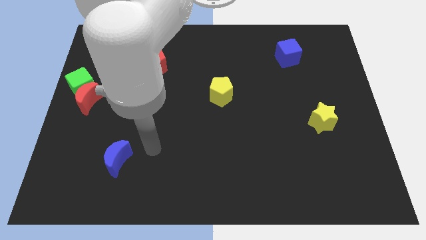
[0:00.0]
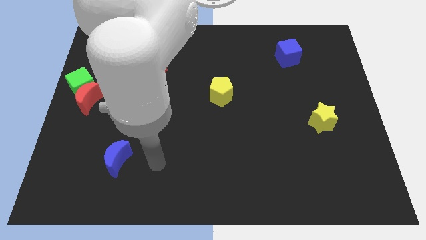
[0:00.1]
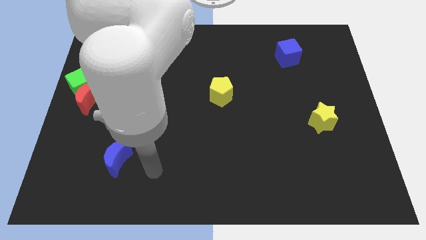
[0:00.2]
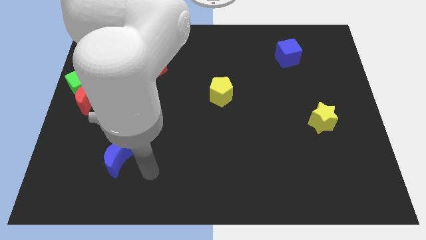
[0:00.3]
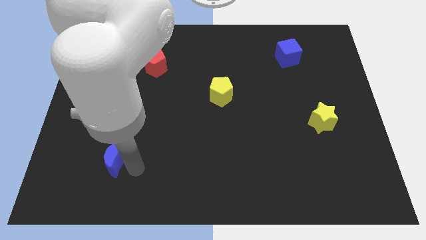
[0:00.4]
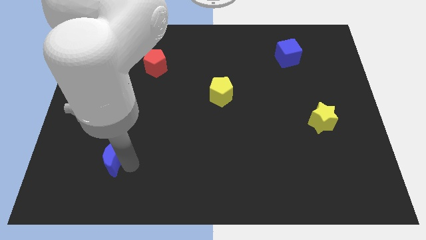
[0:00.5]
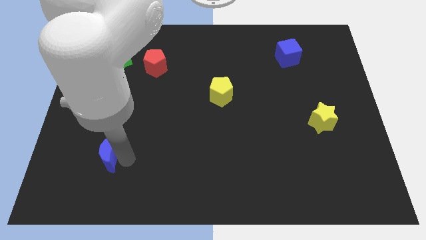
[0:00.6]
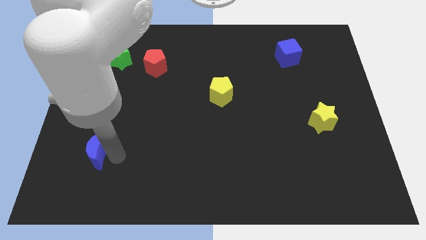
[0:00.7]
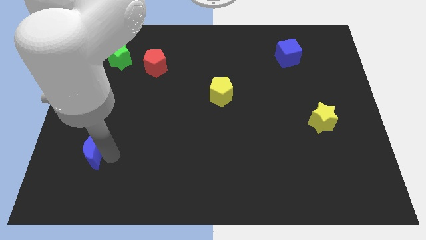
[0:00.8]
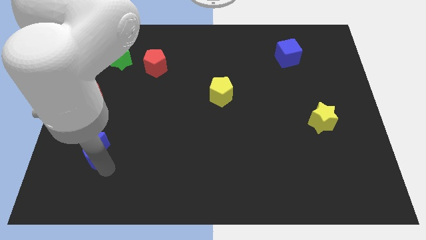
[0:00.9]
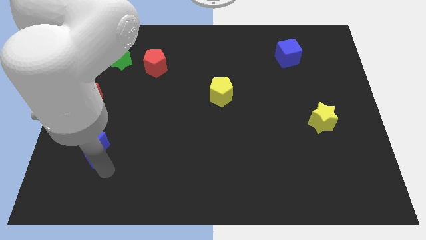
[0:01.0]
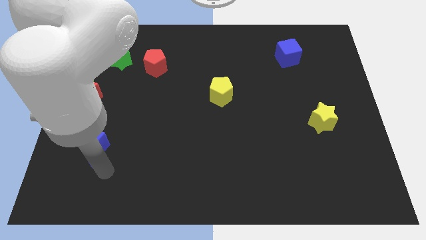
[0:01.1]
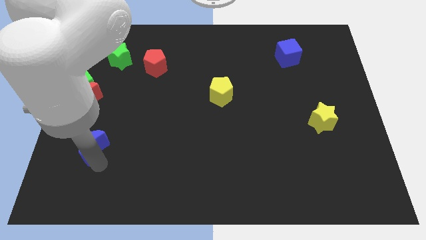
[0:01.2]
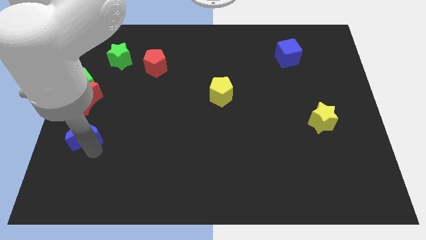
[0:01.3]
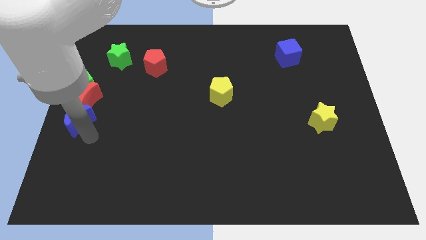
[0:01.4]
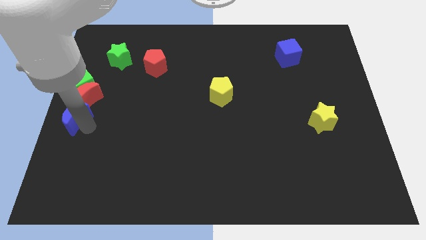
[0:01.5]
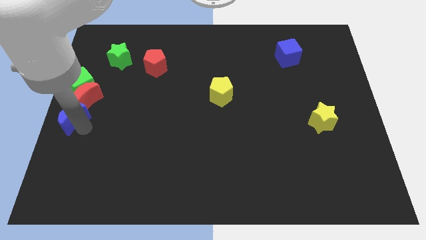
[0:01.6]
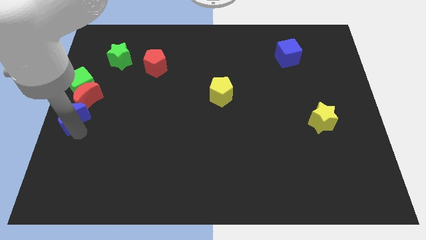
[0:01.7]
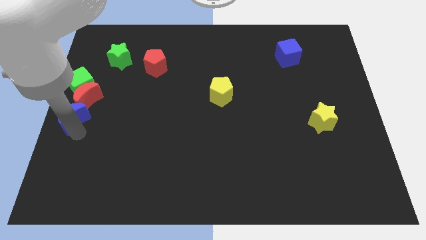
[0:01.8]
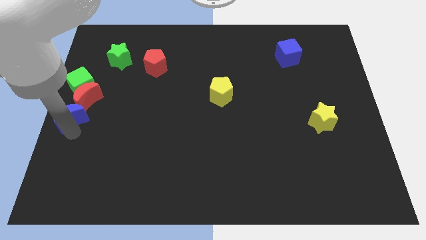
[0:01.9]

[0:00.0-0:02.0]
move the blue moon below red moon

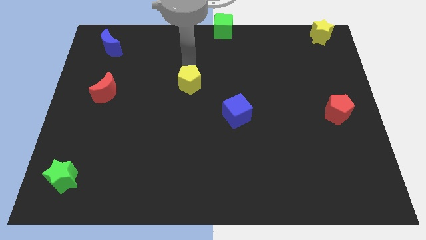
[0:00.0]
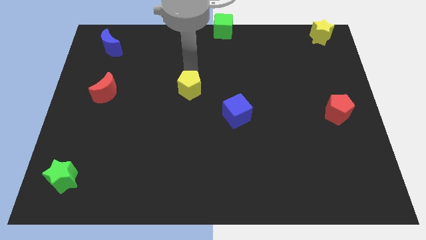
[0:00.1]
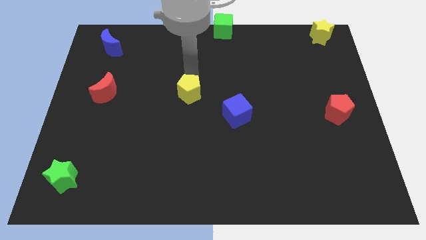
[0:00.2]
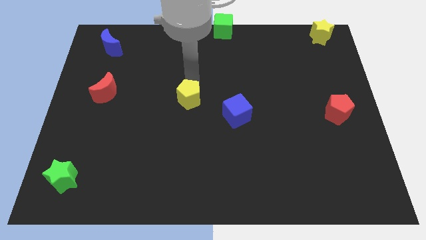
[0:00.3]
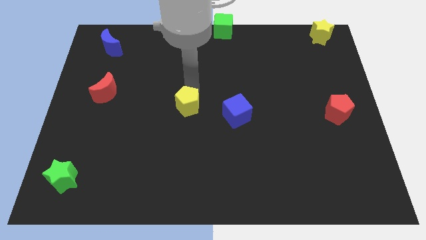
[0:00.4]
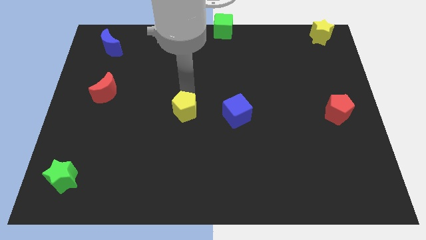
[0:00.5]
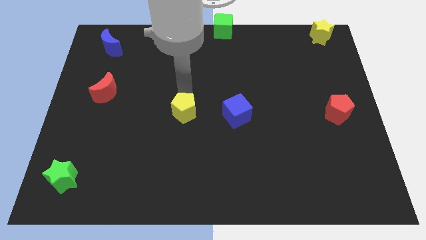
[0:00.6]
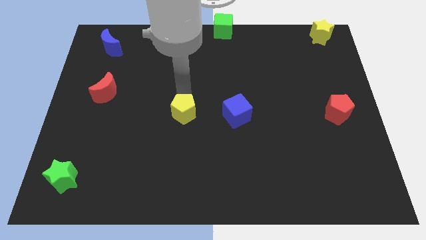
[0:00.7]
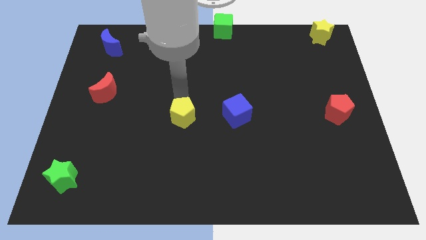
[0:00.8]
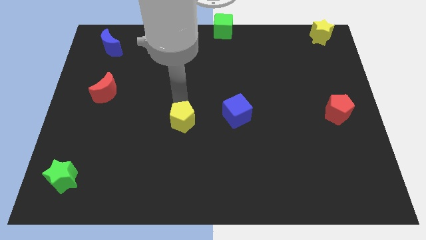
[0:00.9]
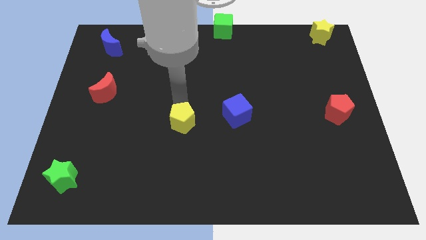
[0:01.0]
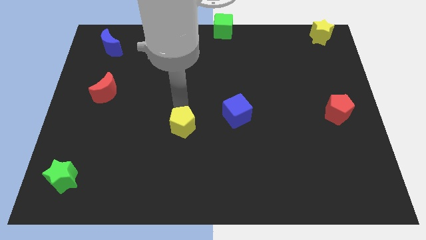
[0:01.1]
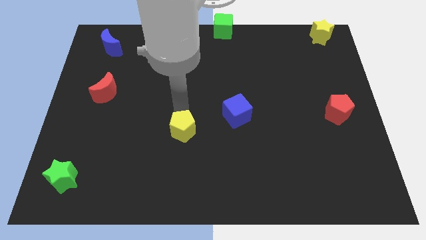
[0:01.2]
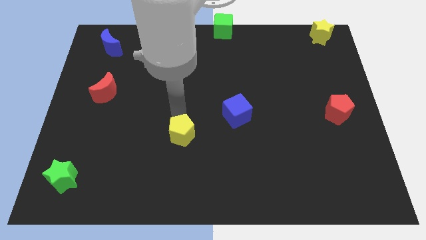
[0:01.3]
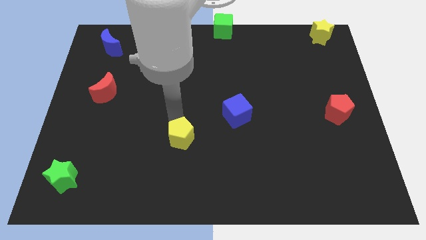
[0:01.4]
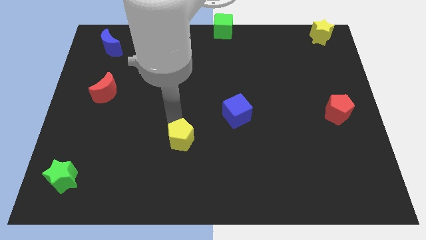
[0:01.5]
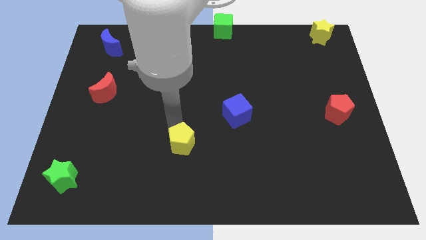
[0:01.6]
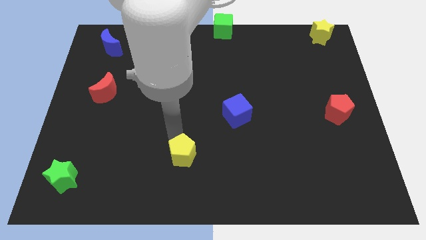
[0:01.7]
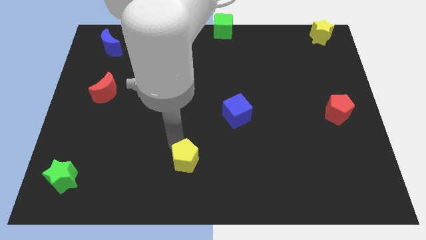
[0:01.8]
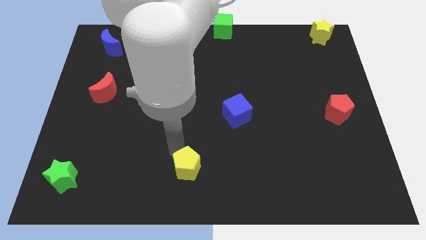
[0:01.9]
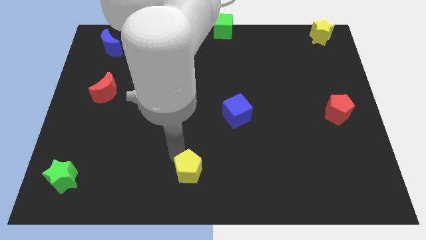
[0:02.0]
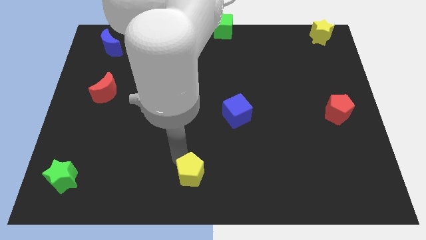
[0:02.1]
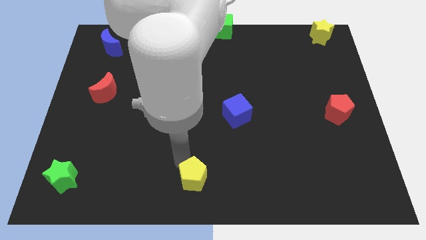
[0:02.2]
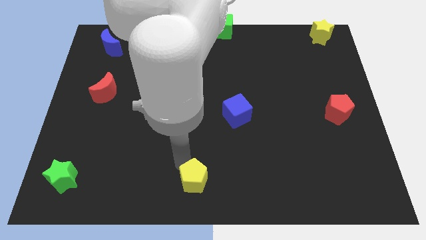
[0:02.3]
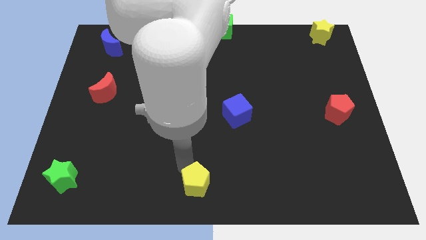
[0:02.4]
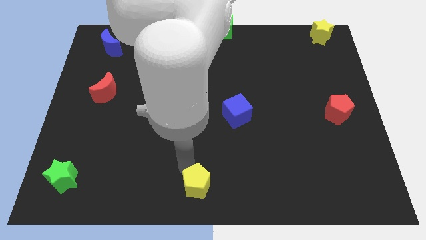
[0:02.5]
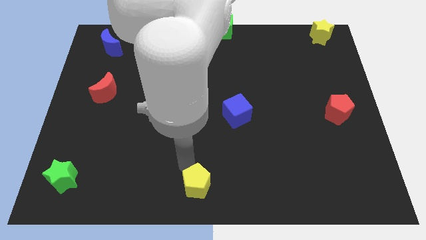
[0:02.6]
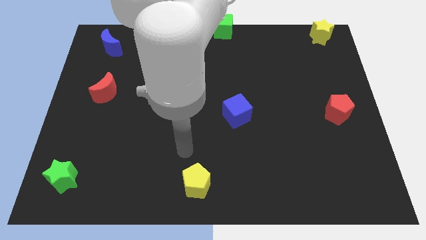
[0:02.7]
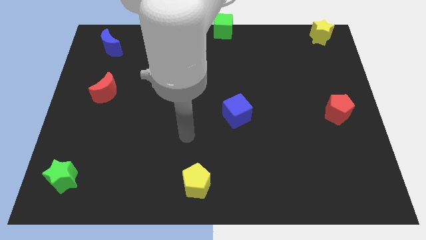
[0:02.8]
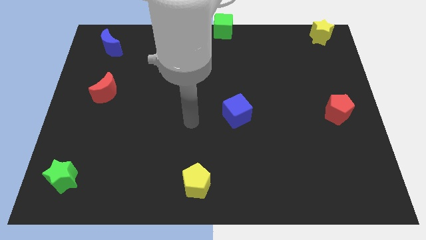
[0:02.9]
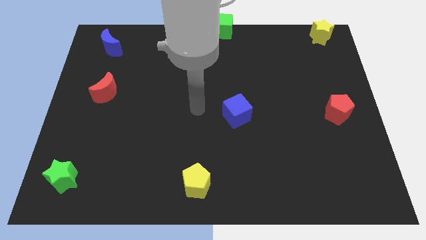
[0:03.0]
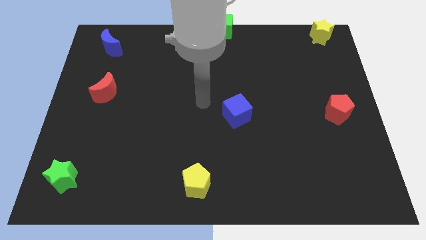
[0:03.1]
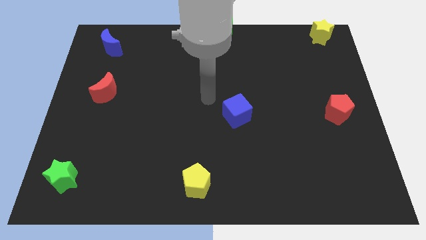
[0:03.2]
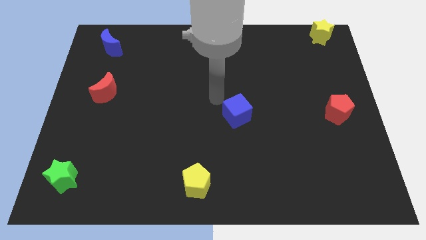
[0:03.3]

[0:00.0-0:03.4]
move the yellow pentagon towards the bottom center of the board

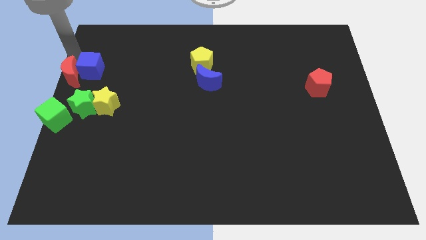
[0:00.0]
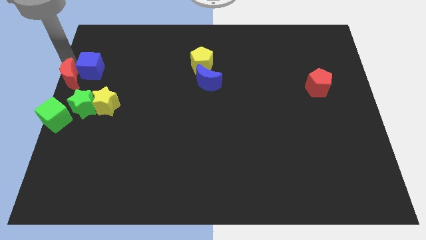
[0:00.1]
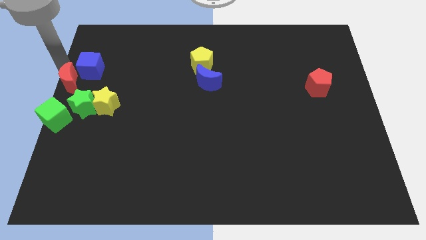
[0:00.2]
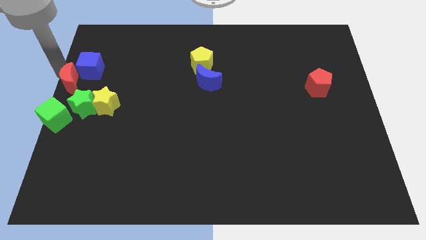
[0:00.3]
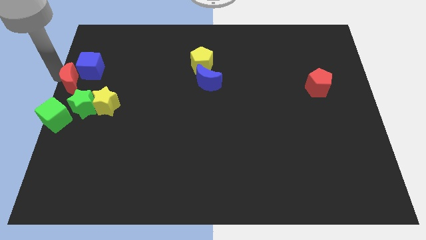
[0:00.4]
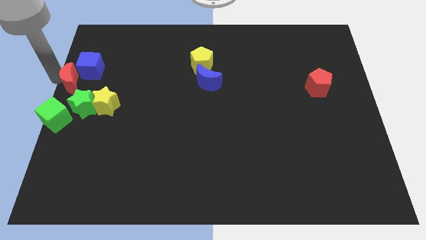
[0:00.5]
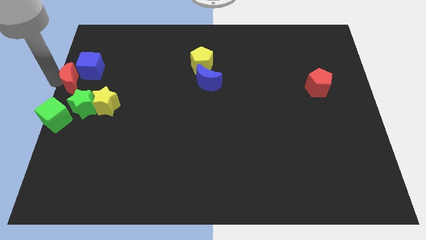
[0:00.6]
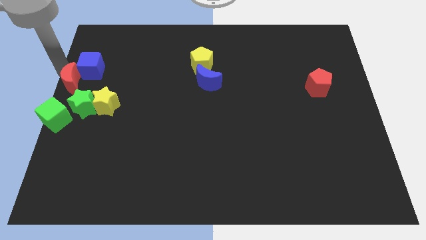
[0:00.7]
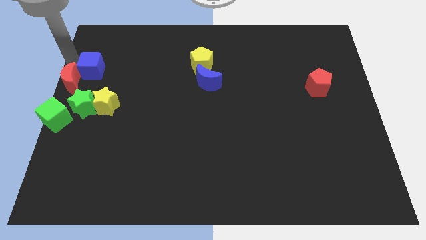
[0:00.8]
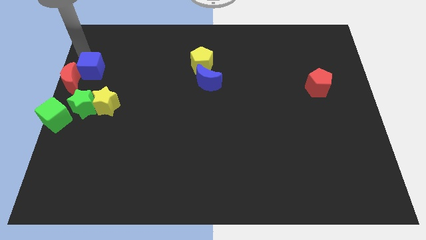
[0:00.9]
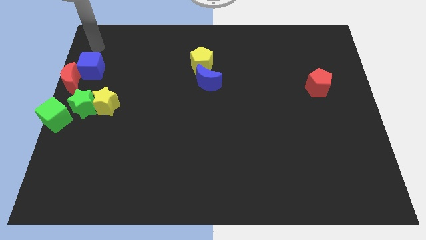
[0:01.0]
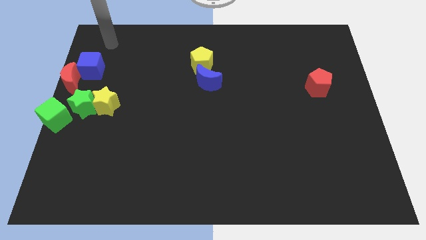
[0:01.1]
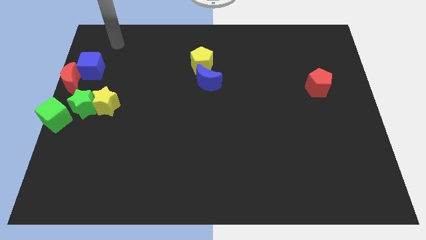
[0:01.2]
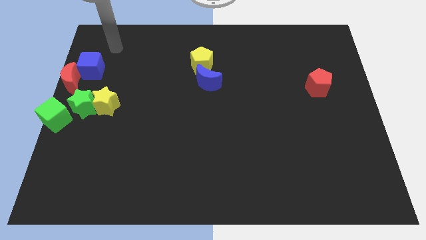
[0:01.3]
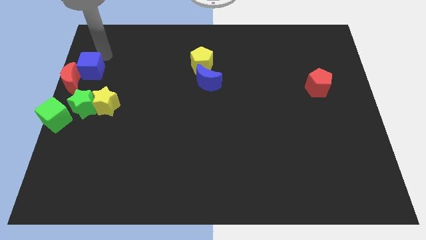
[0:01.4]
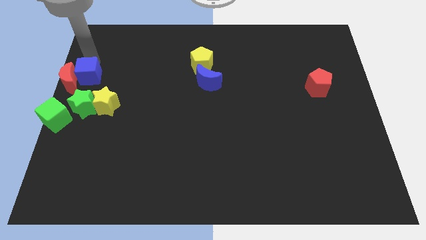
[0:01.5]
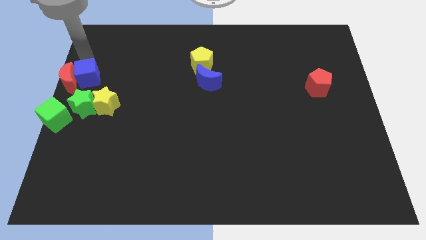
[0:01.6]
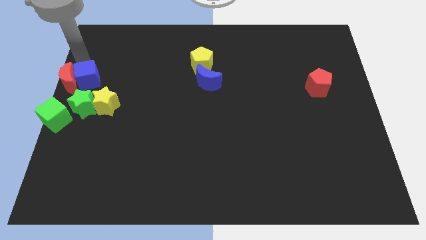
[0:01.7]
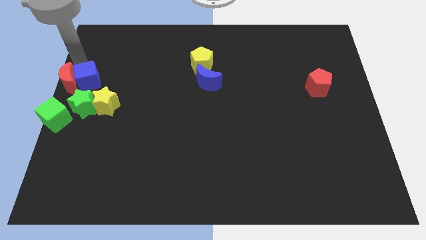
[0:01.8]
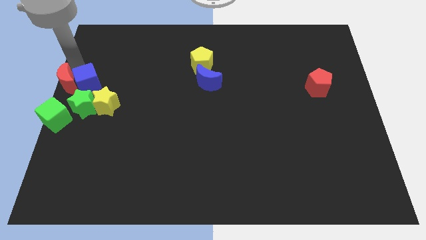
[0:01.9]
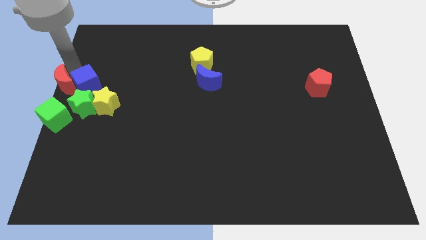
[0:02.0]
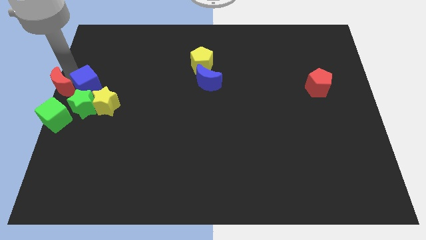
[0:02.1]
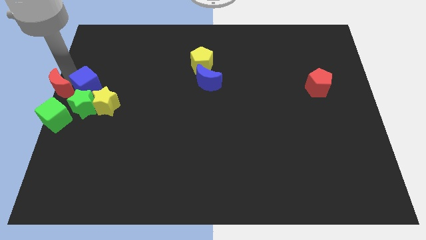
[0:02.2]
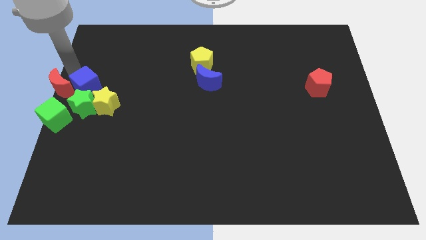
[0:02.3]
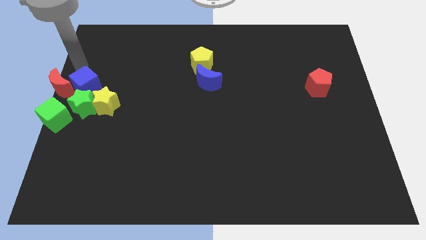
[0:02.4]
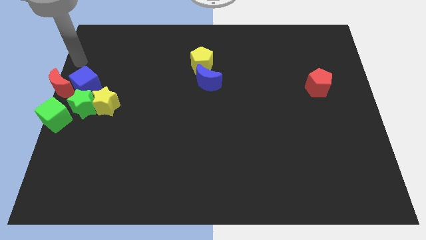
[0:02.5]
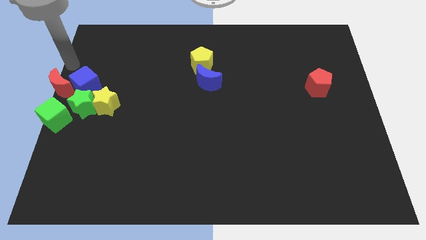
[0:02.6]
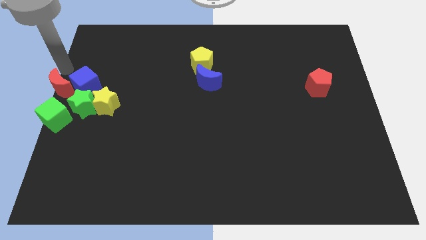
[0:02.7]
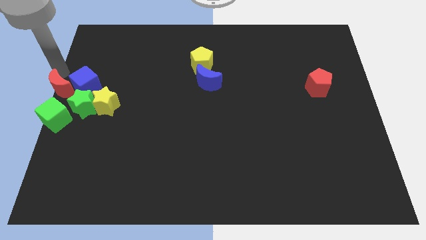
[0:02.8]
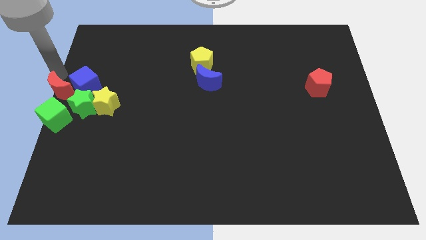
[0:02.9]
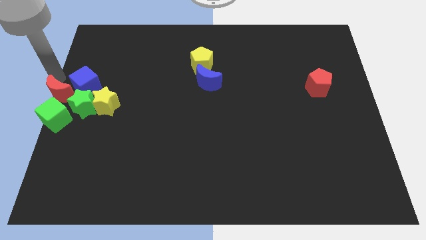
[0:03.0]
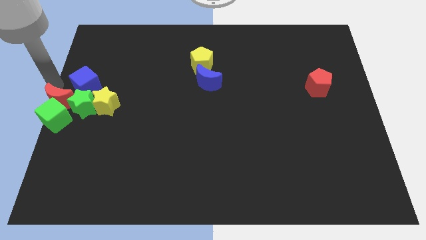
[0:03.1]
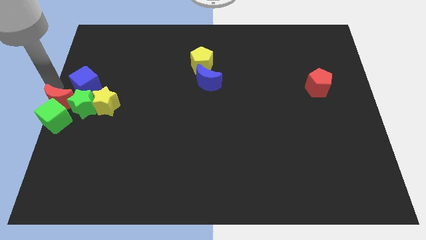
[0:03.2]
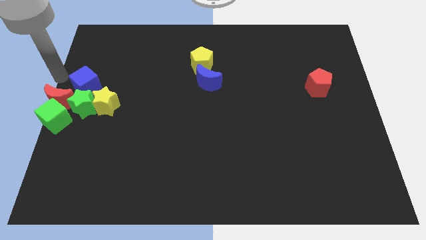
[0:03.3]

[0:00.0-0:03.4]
place the blue cube and red crescent close to green star
